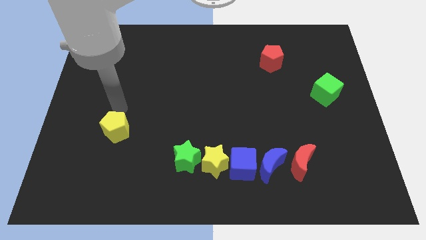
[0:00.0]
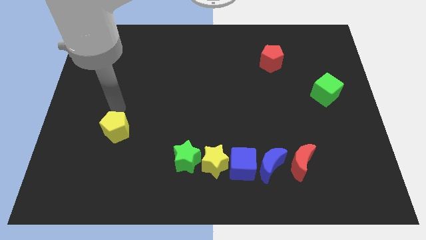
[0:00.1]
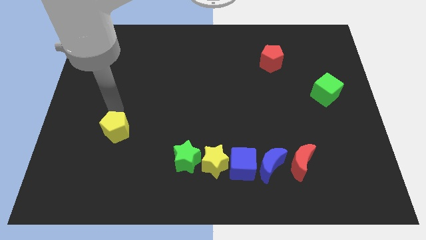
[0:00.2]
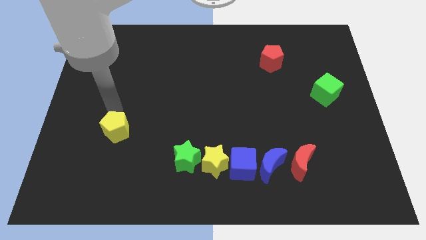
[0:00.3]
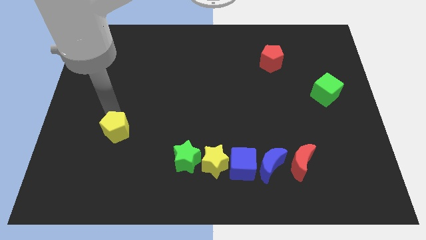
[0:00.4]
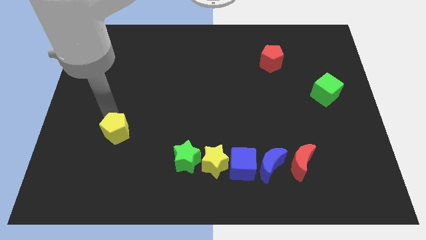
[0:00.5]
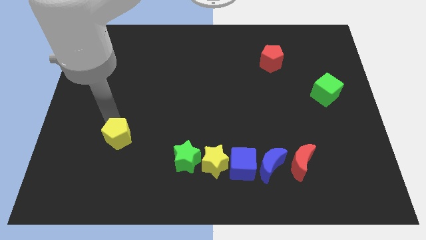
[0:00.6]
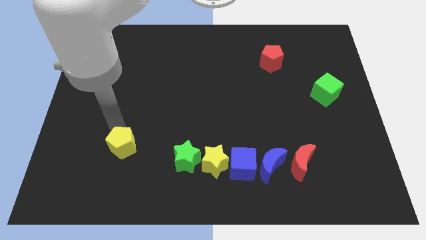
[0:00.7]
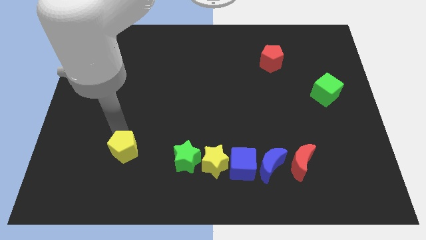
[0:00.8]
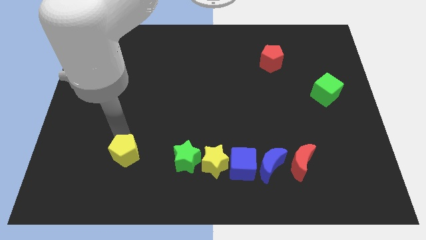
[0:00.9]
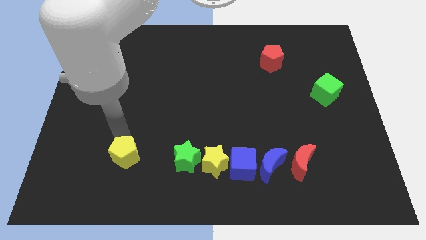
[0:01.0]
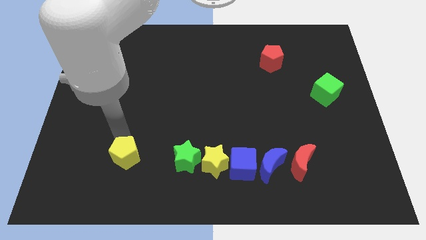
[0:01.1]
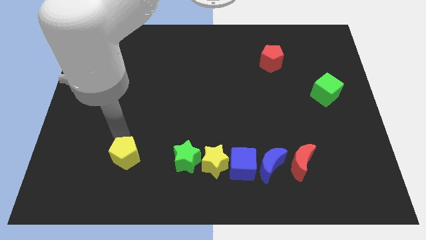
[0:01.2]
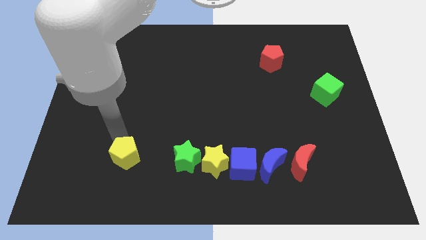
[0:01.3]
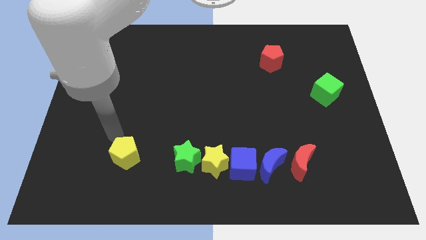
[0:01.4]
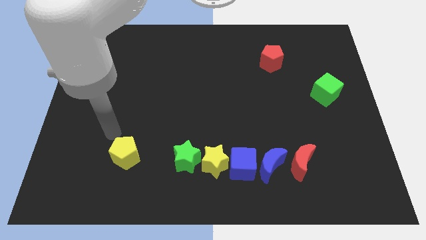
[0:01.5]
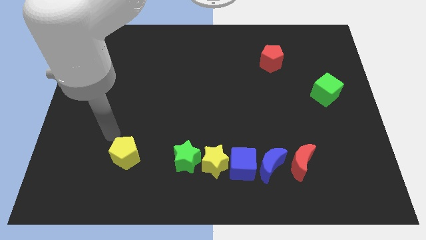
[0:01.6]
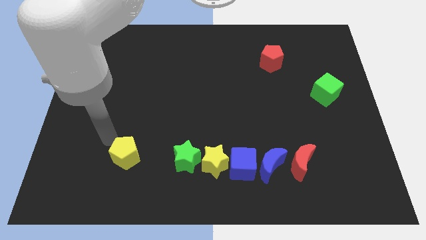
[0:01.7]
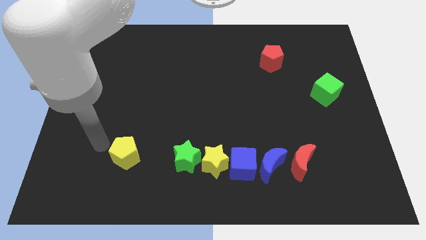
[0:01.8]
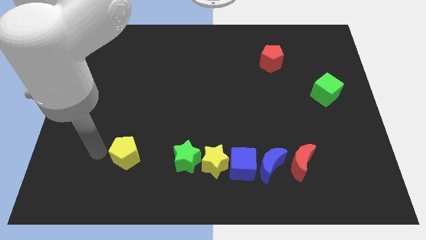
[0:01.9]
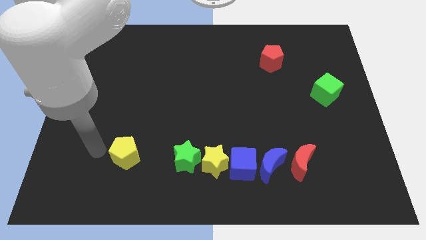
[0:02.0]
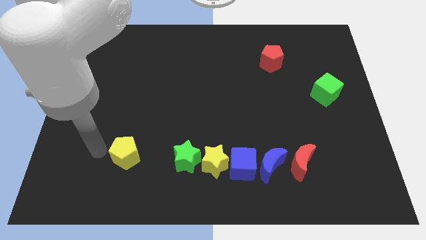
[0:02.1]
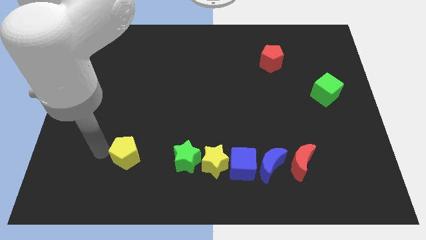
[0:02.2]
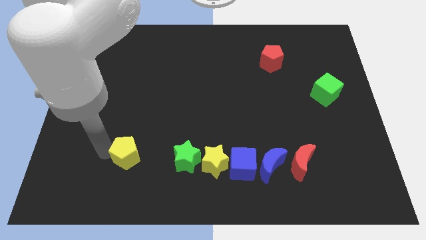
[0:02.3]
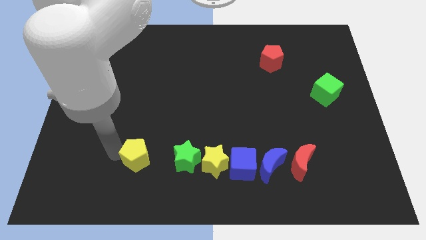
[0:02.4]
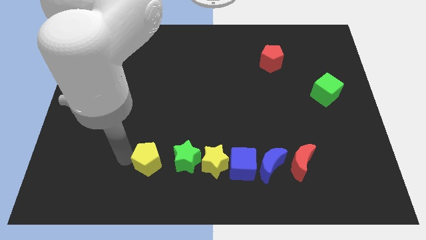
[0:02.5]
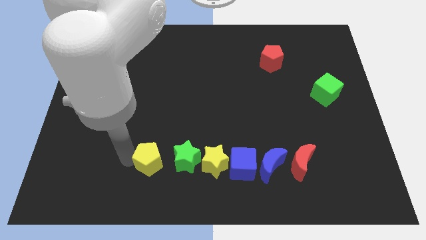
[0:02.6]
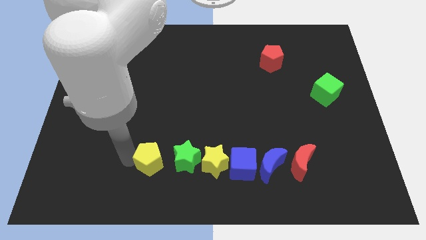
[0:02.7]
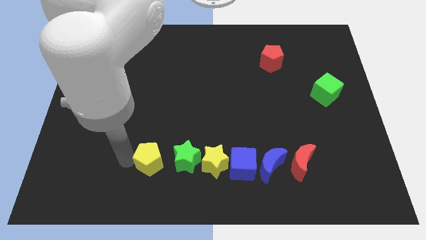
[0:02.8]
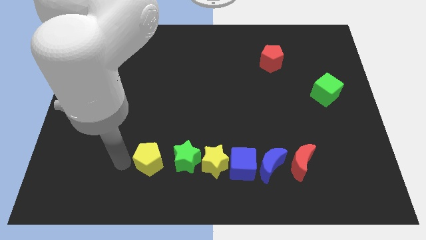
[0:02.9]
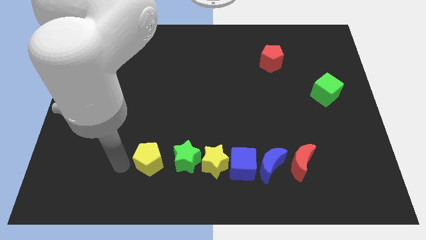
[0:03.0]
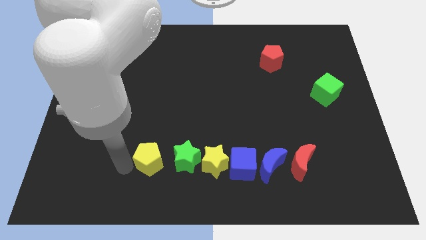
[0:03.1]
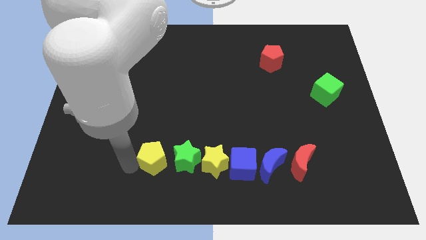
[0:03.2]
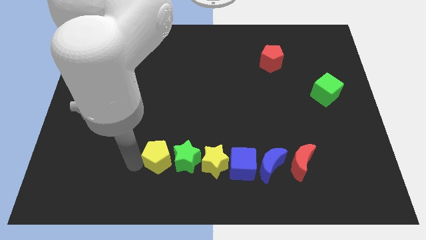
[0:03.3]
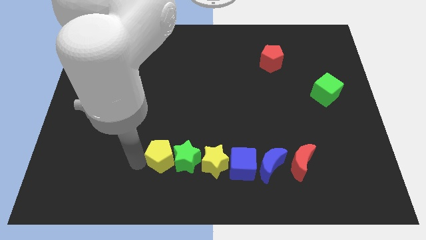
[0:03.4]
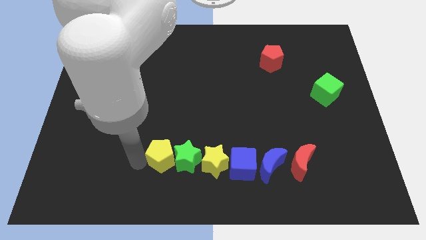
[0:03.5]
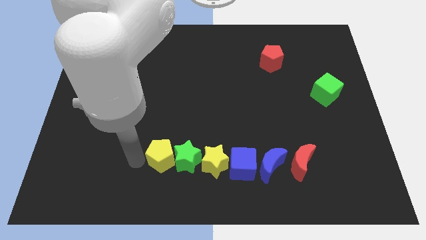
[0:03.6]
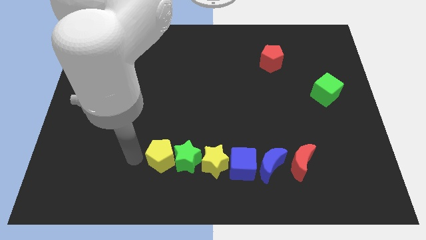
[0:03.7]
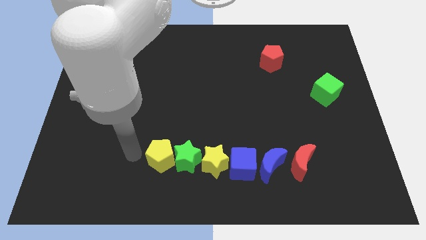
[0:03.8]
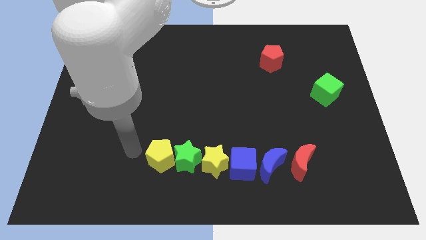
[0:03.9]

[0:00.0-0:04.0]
slide yellow pentagon to the left of the green star

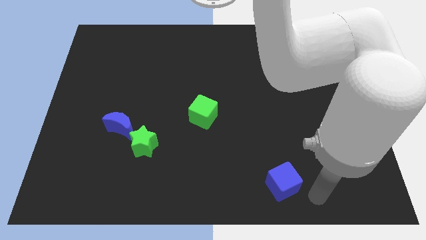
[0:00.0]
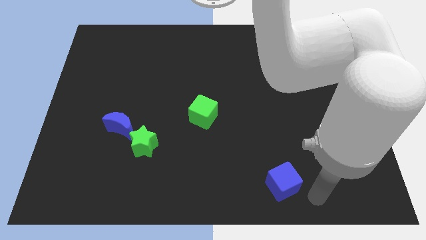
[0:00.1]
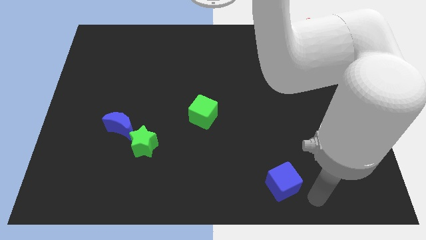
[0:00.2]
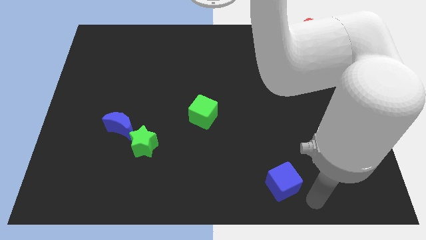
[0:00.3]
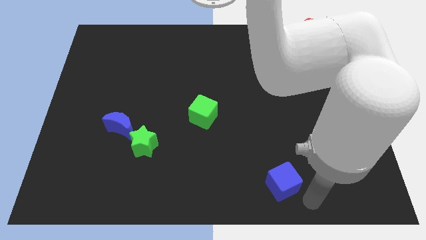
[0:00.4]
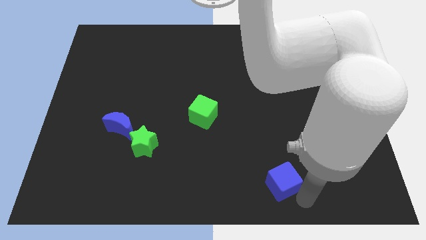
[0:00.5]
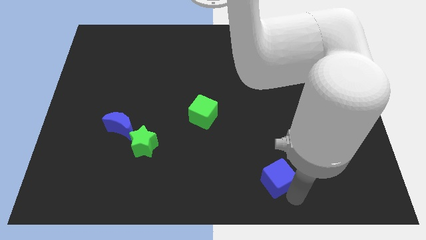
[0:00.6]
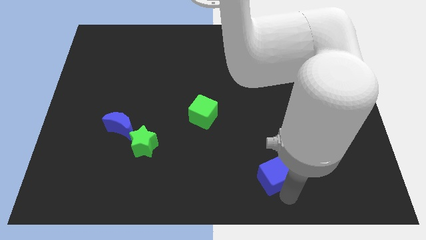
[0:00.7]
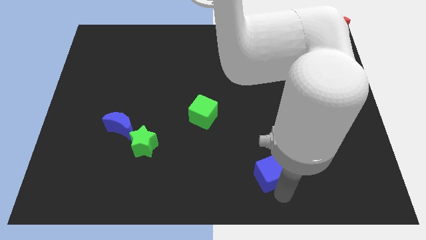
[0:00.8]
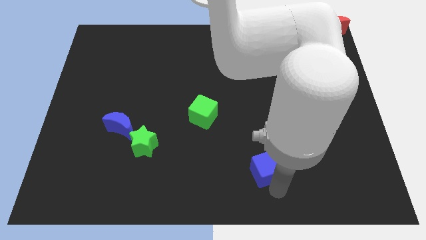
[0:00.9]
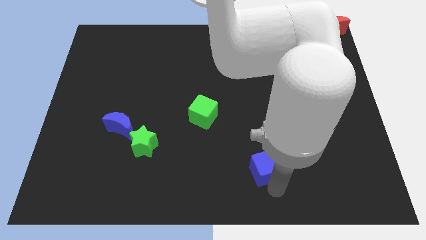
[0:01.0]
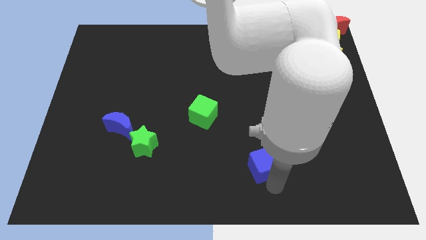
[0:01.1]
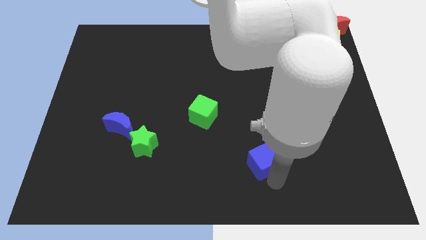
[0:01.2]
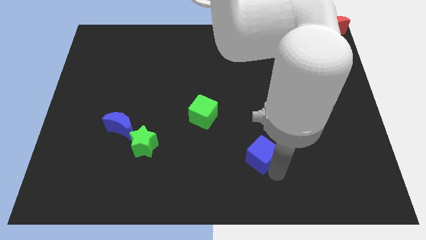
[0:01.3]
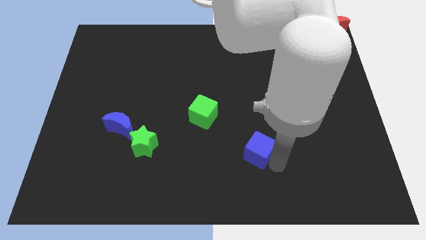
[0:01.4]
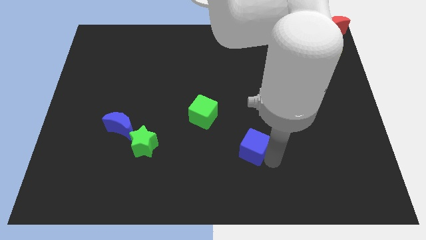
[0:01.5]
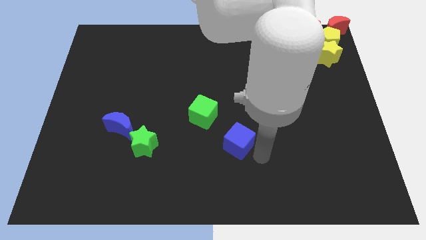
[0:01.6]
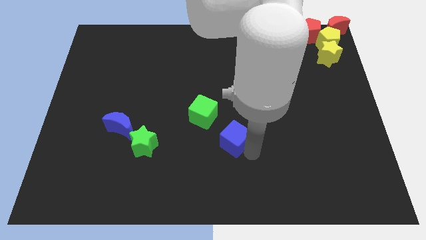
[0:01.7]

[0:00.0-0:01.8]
move the blue cube towards the green cube

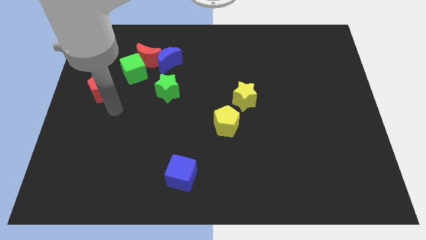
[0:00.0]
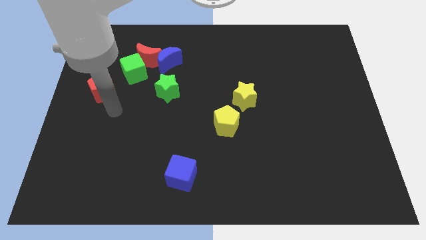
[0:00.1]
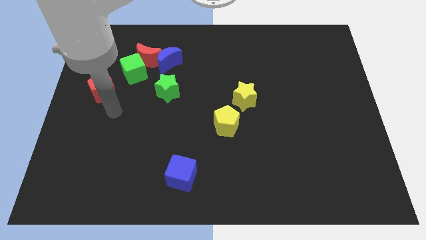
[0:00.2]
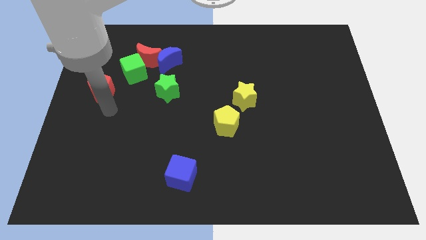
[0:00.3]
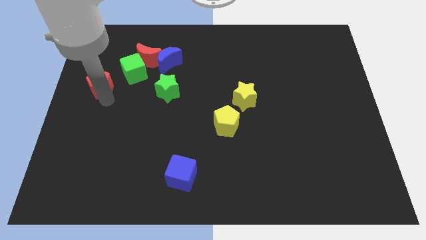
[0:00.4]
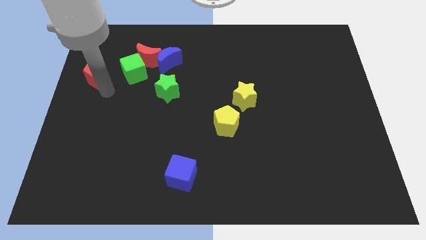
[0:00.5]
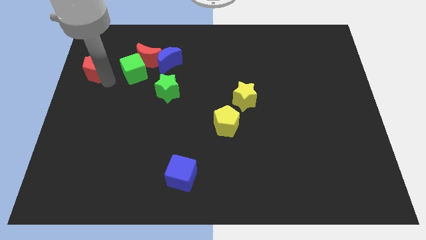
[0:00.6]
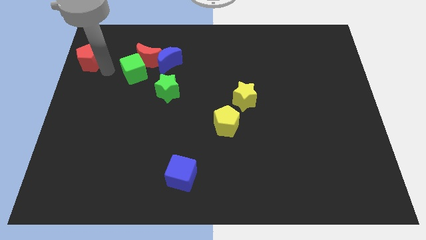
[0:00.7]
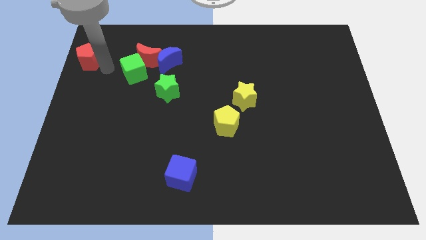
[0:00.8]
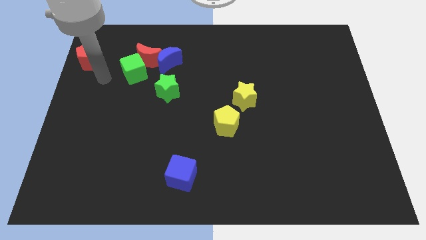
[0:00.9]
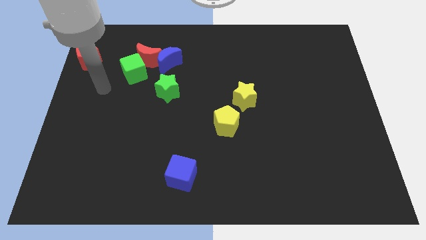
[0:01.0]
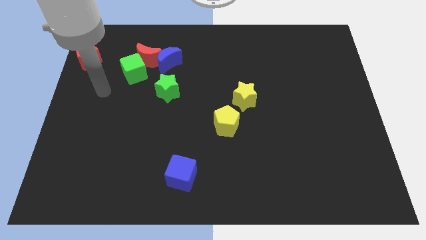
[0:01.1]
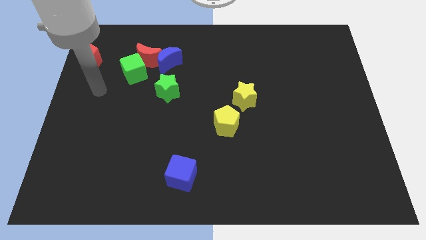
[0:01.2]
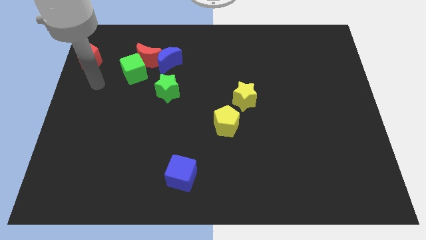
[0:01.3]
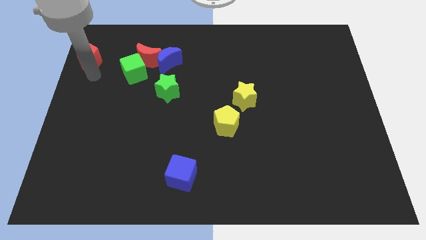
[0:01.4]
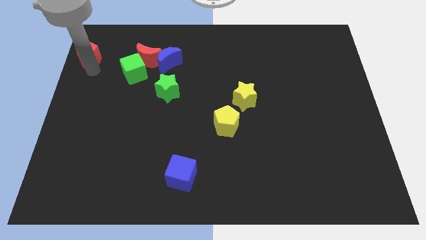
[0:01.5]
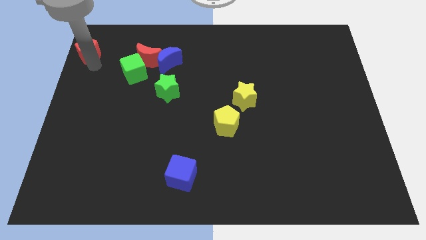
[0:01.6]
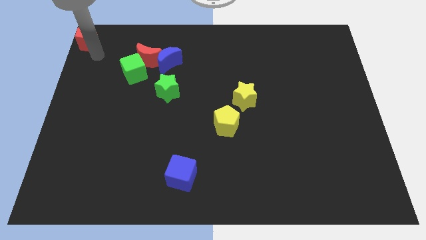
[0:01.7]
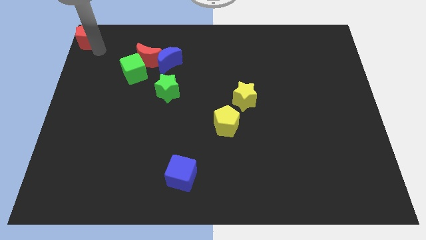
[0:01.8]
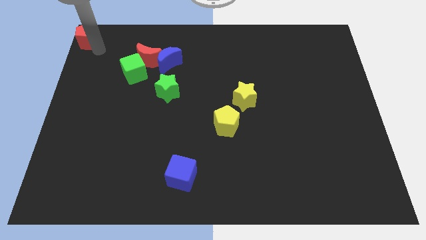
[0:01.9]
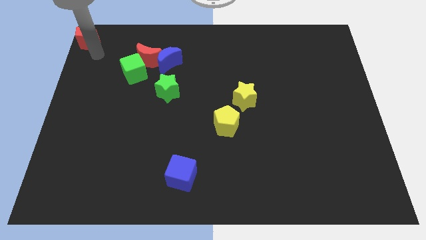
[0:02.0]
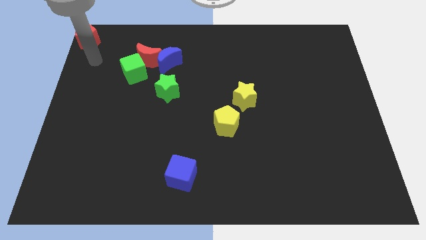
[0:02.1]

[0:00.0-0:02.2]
move the red pentagon to the top left corner of the board

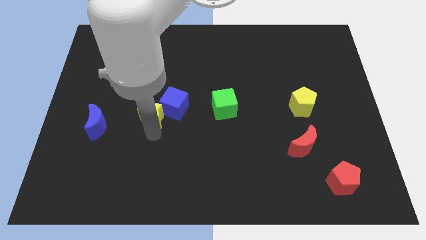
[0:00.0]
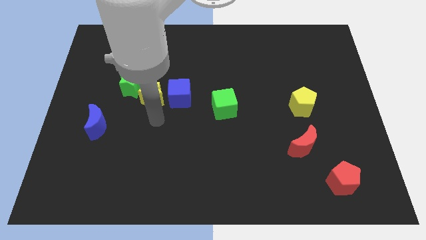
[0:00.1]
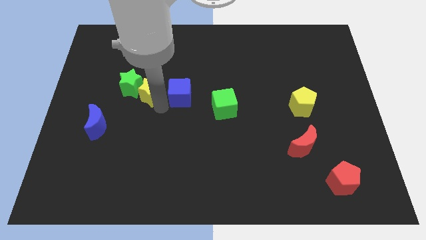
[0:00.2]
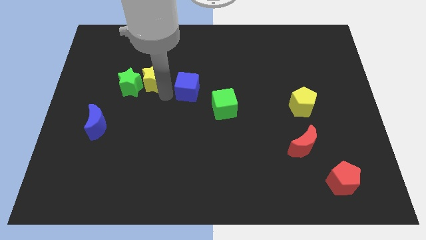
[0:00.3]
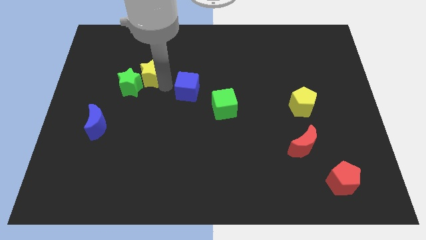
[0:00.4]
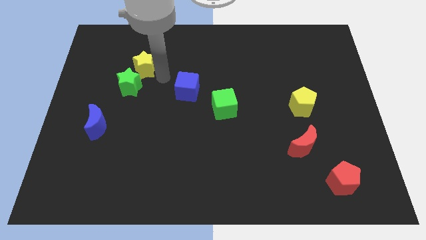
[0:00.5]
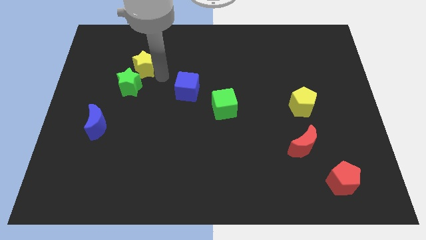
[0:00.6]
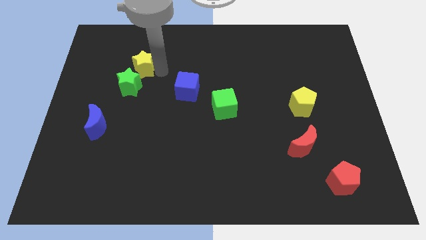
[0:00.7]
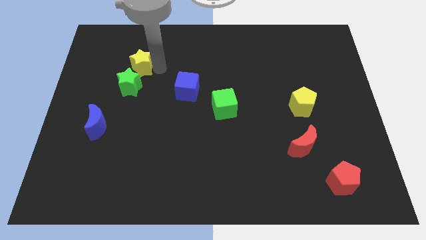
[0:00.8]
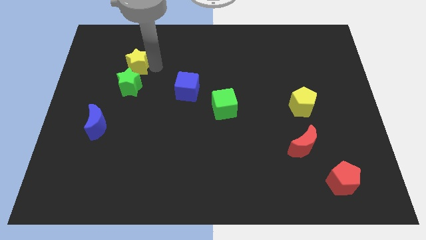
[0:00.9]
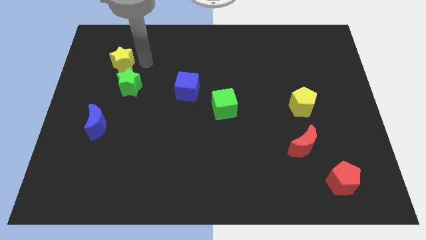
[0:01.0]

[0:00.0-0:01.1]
move the yellow star above to the green star
